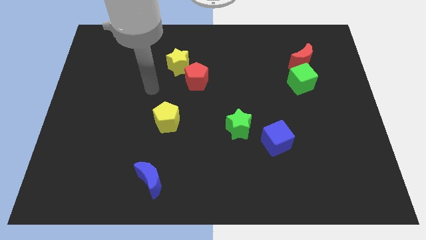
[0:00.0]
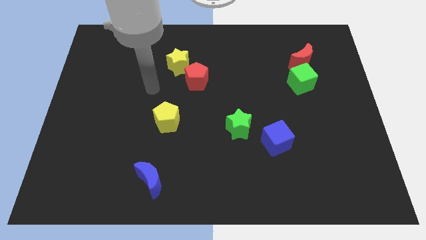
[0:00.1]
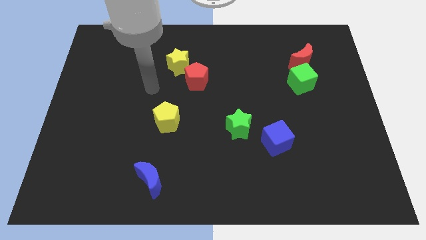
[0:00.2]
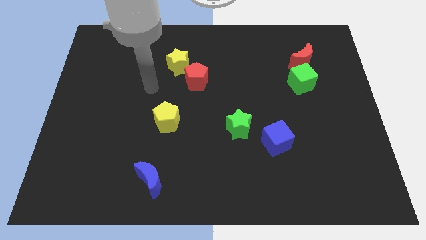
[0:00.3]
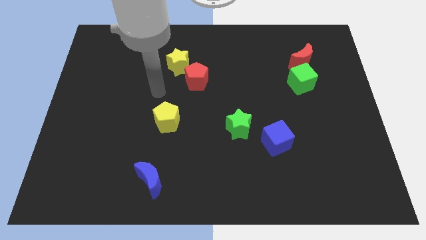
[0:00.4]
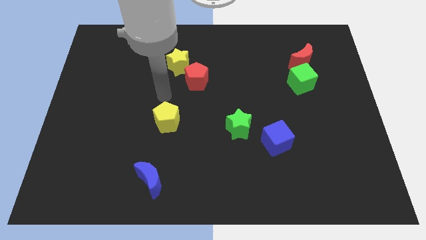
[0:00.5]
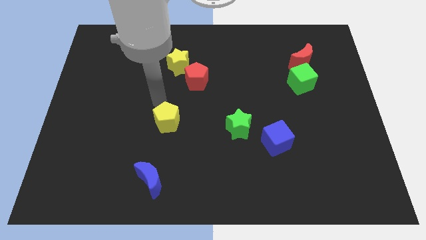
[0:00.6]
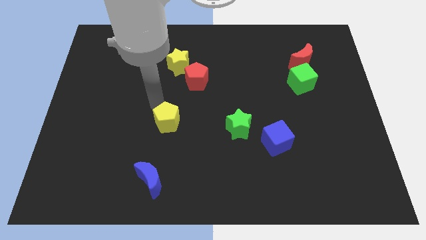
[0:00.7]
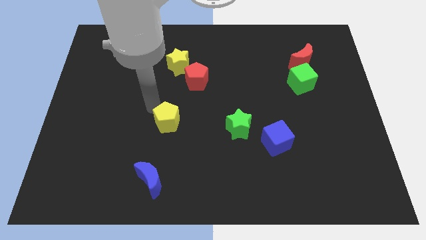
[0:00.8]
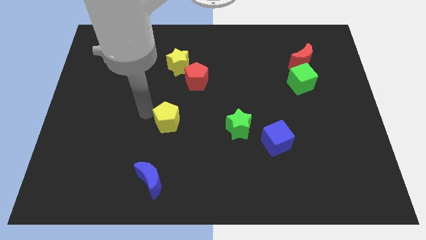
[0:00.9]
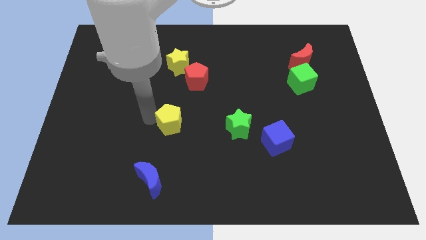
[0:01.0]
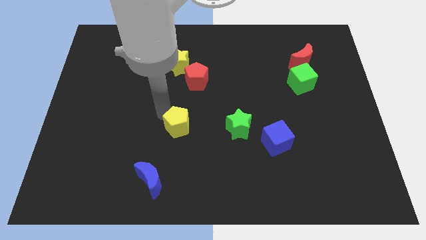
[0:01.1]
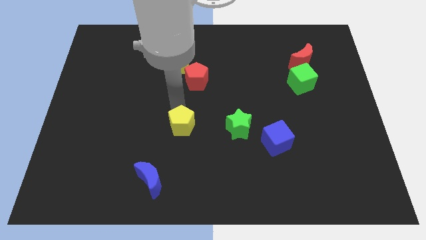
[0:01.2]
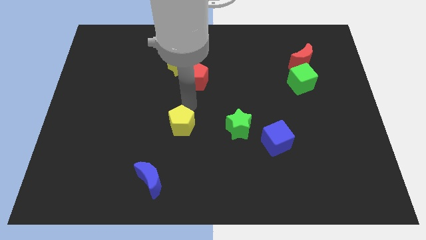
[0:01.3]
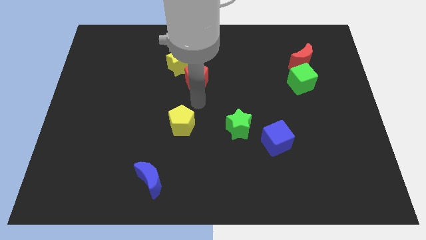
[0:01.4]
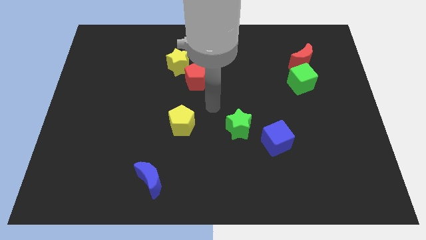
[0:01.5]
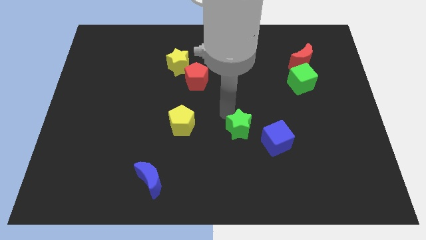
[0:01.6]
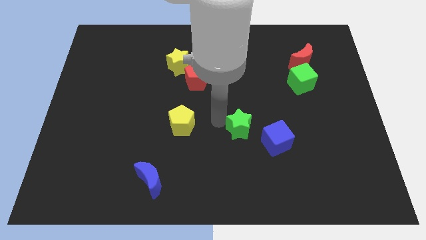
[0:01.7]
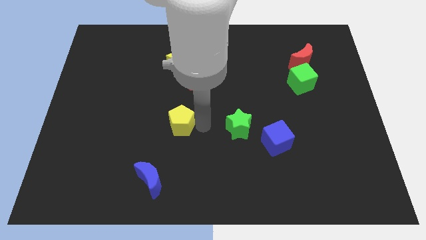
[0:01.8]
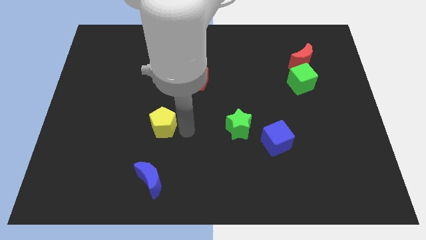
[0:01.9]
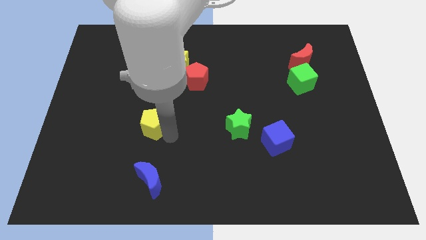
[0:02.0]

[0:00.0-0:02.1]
slide yellow pentagon on top of blue moon

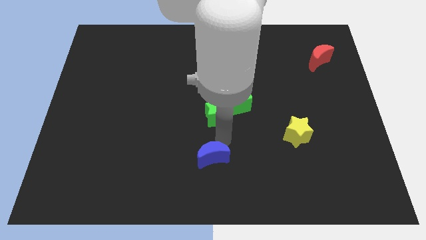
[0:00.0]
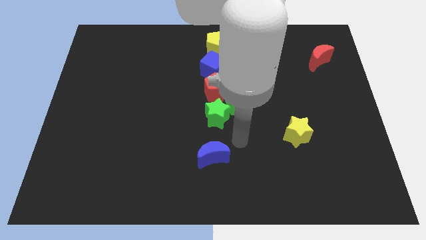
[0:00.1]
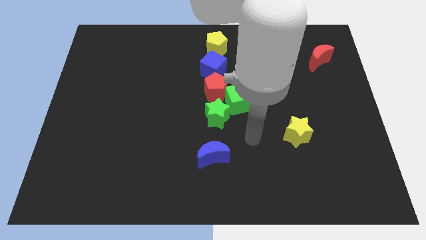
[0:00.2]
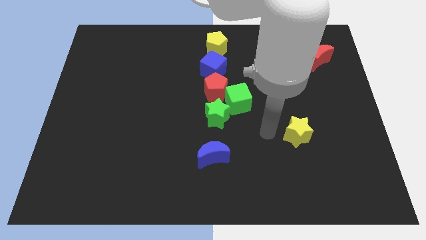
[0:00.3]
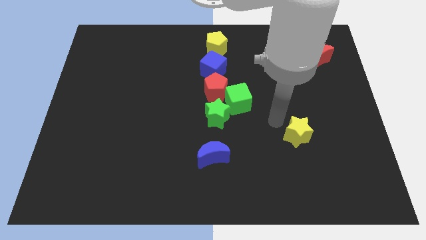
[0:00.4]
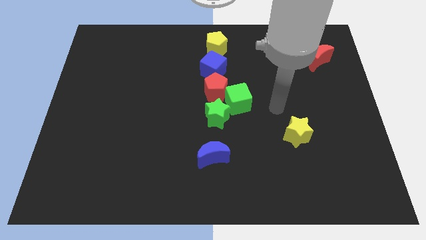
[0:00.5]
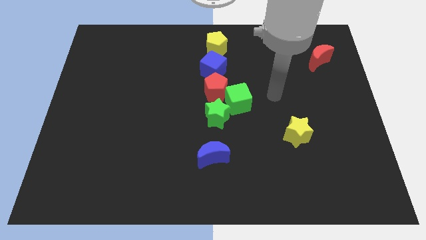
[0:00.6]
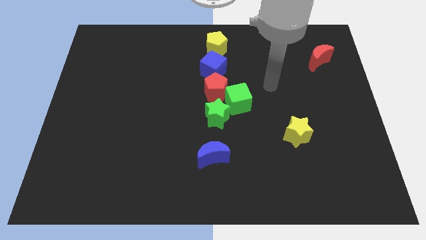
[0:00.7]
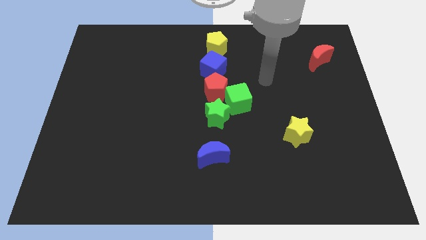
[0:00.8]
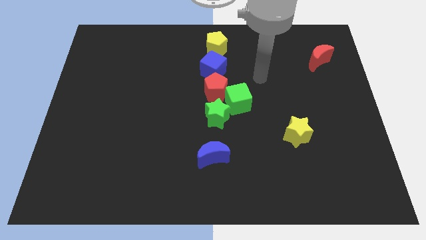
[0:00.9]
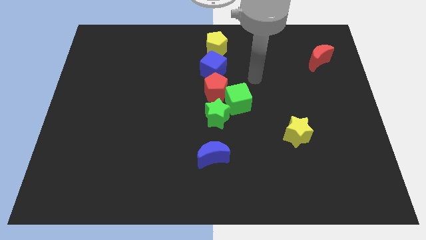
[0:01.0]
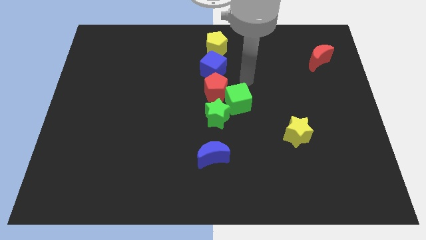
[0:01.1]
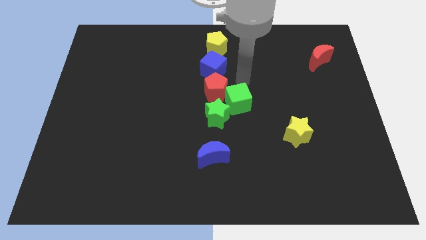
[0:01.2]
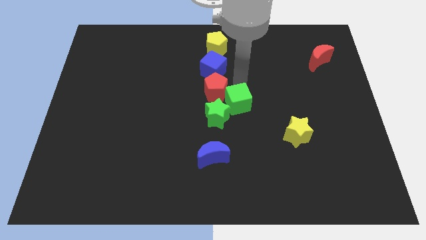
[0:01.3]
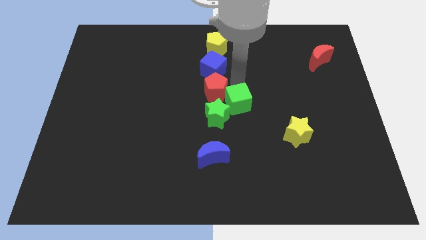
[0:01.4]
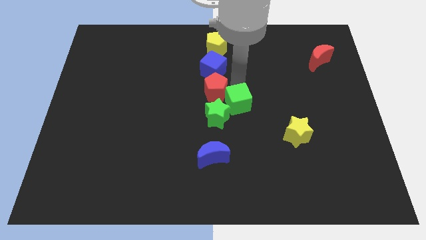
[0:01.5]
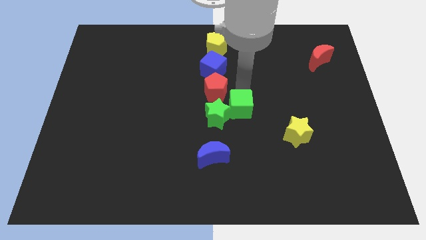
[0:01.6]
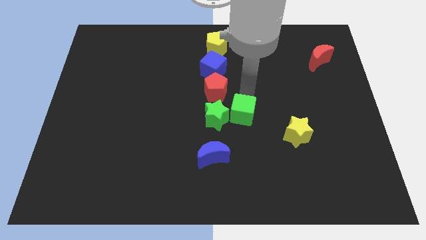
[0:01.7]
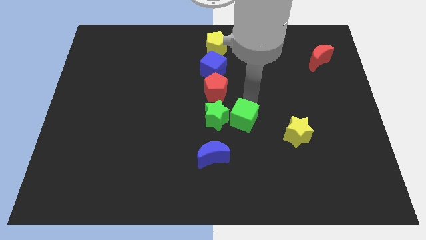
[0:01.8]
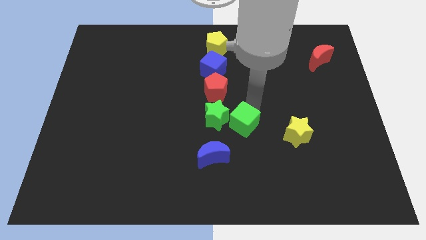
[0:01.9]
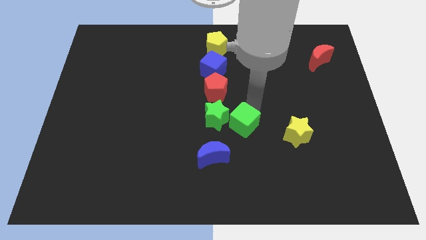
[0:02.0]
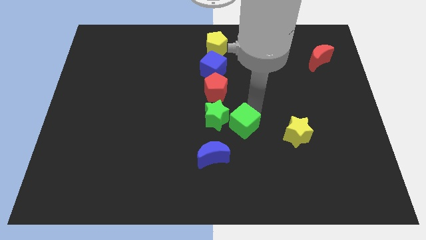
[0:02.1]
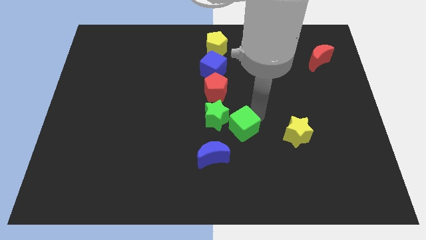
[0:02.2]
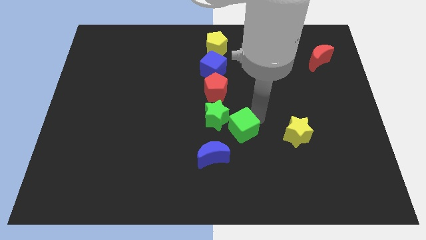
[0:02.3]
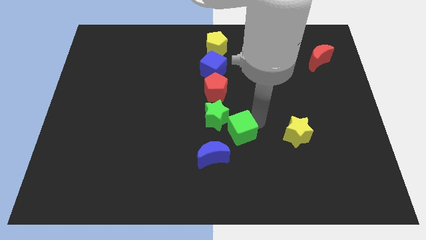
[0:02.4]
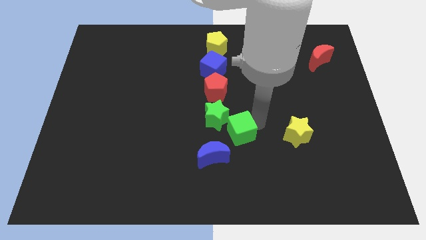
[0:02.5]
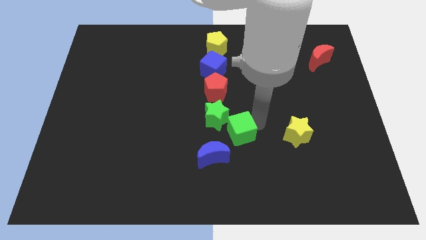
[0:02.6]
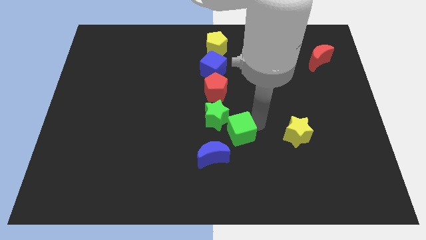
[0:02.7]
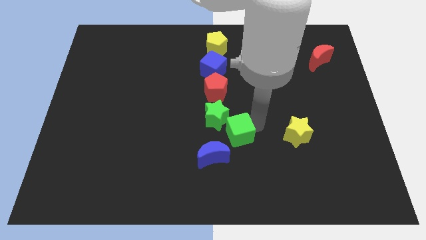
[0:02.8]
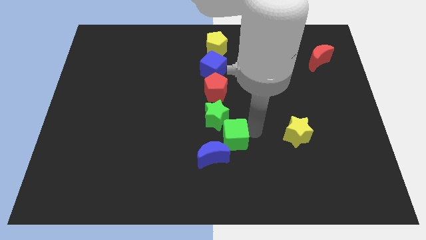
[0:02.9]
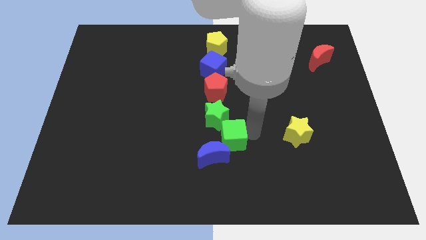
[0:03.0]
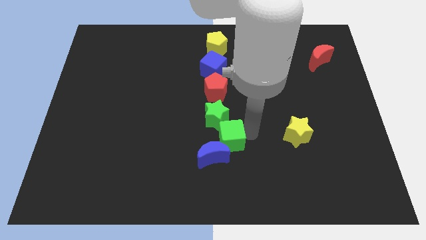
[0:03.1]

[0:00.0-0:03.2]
push the green cube to the bottom right of the green star

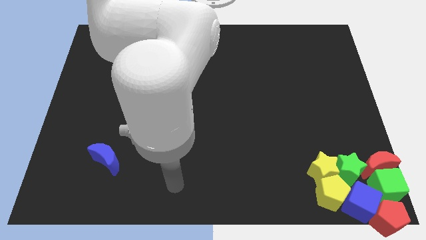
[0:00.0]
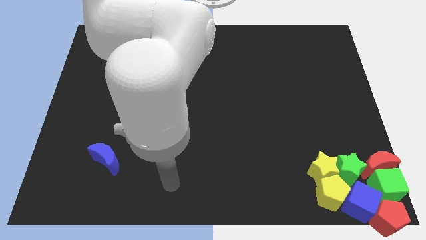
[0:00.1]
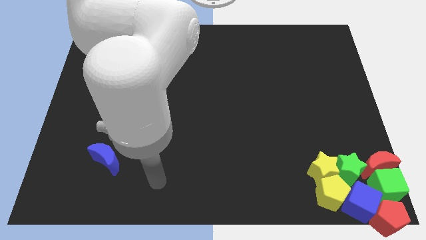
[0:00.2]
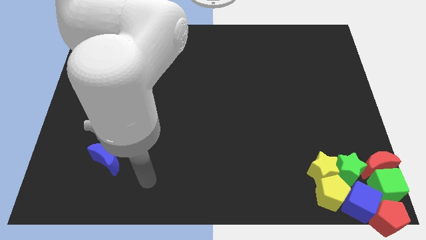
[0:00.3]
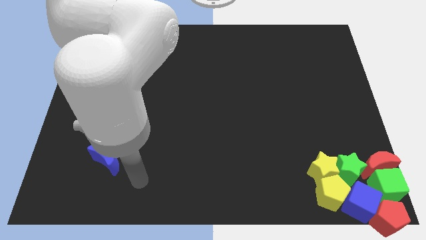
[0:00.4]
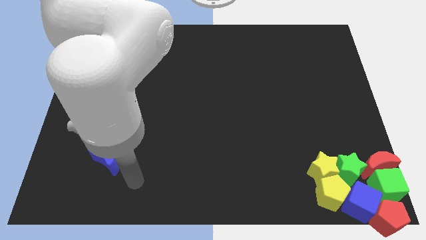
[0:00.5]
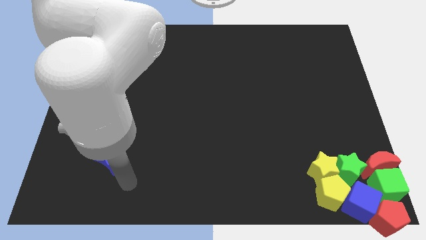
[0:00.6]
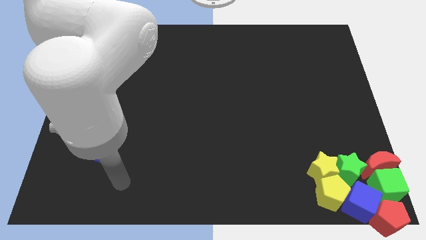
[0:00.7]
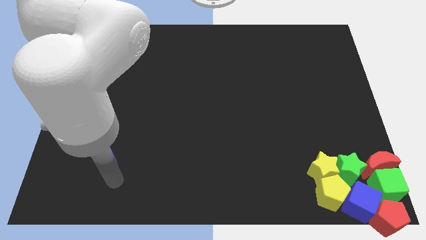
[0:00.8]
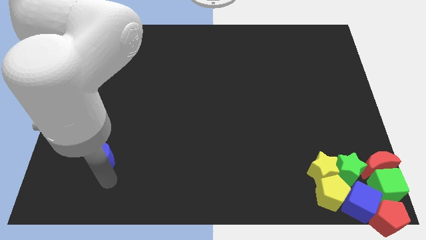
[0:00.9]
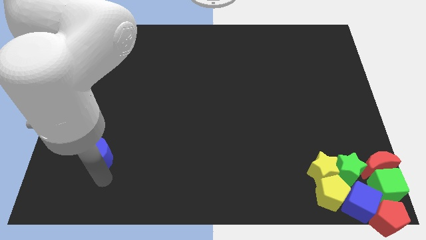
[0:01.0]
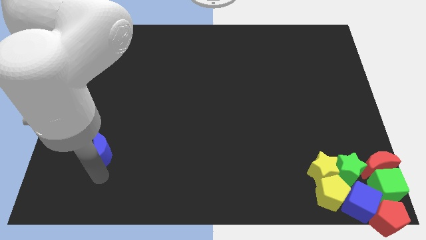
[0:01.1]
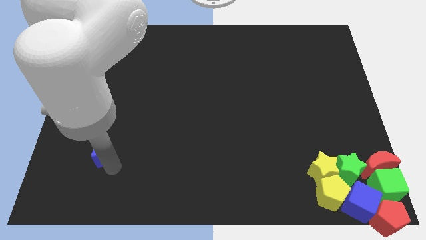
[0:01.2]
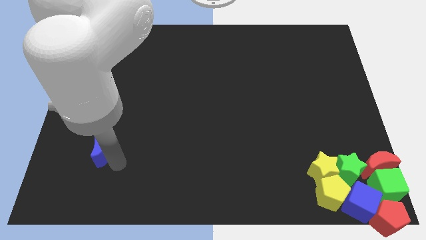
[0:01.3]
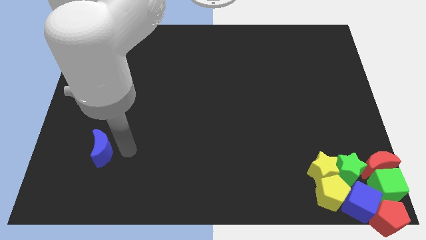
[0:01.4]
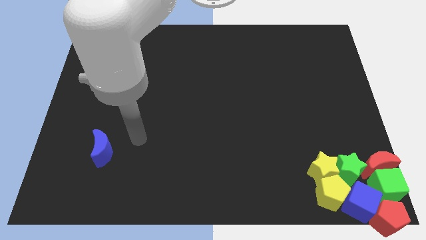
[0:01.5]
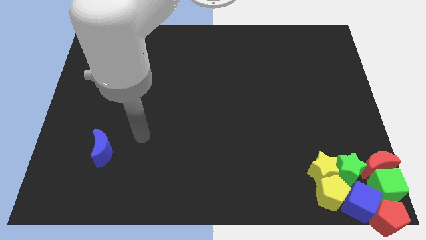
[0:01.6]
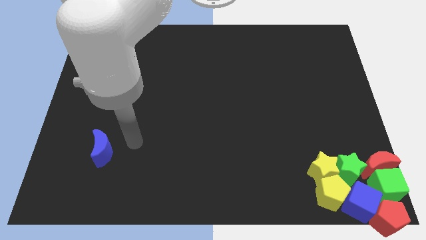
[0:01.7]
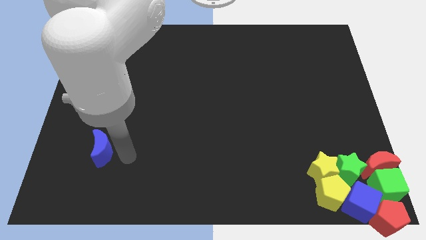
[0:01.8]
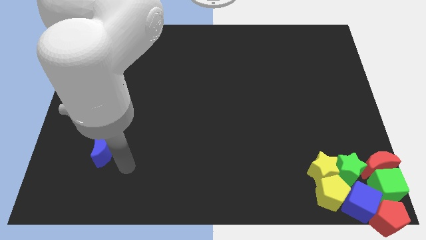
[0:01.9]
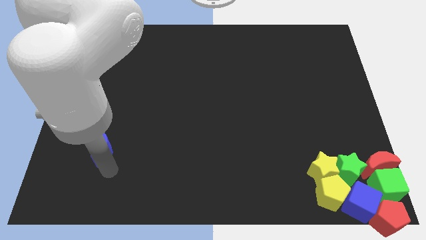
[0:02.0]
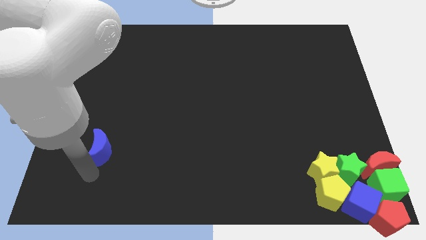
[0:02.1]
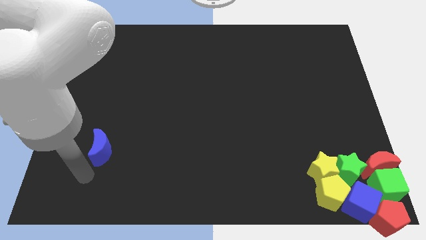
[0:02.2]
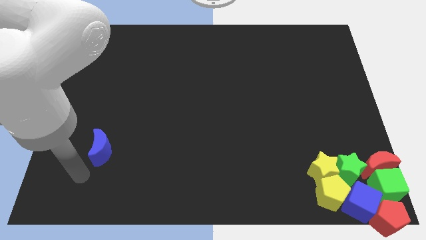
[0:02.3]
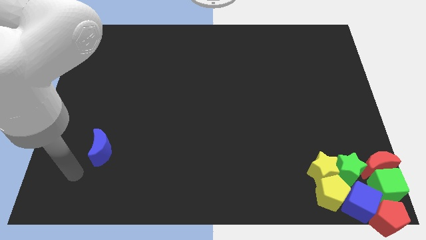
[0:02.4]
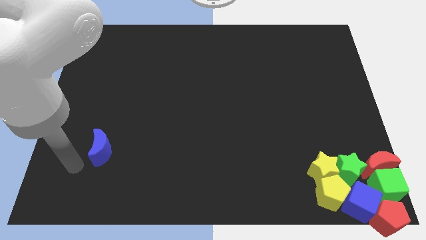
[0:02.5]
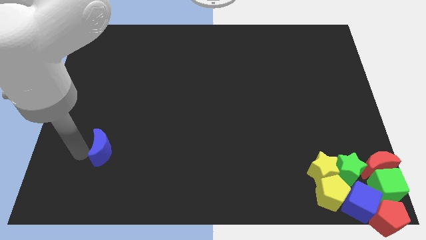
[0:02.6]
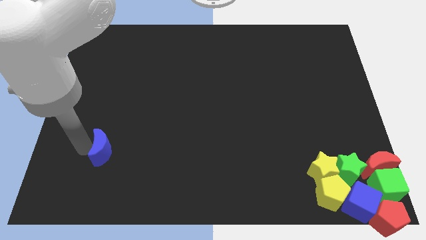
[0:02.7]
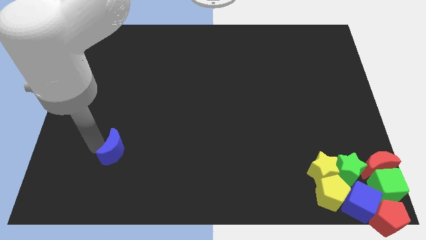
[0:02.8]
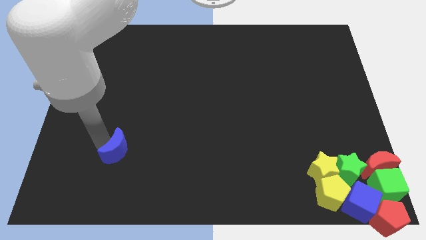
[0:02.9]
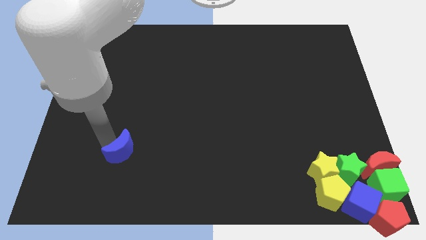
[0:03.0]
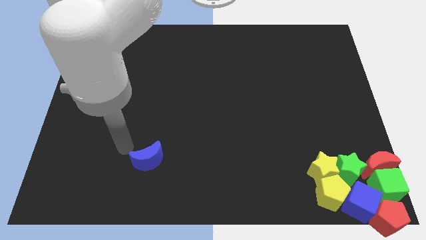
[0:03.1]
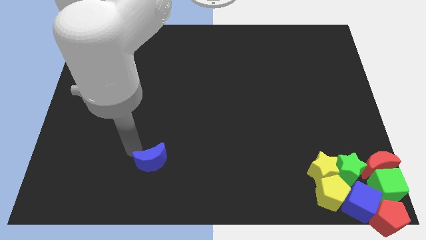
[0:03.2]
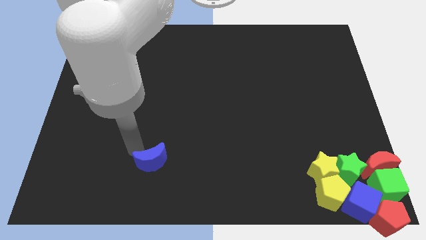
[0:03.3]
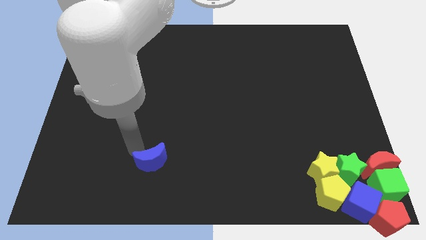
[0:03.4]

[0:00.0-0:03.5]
move blue crescent right
